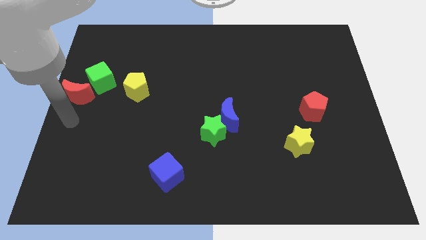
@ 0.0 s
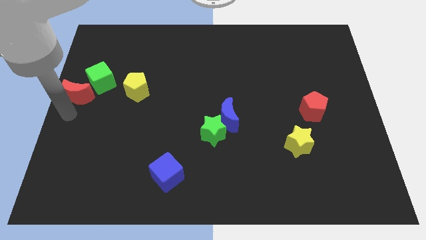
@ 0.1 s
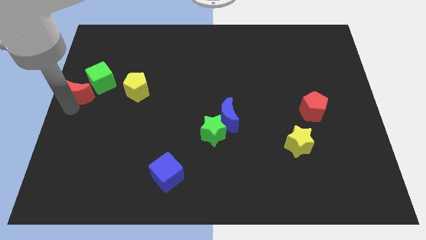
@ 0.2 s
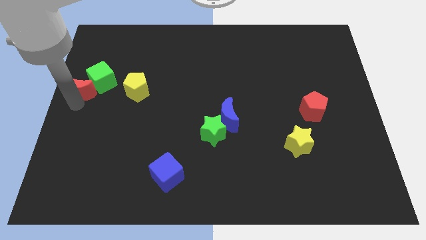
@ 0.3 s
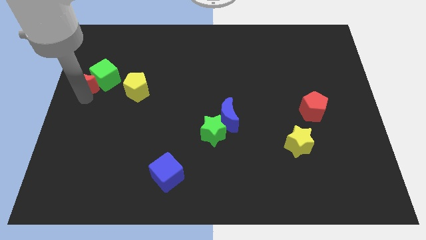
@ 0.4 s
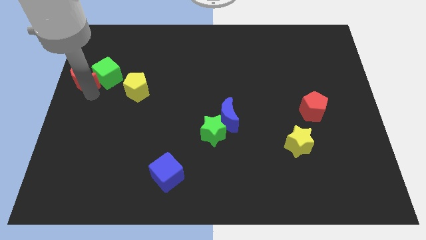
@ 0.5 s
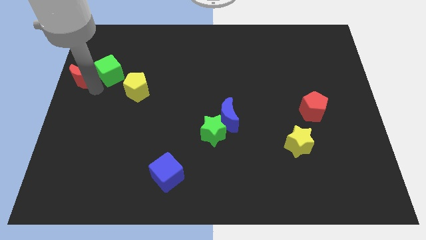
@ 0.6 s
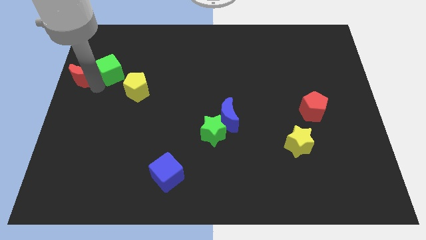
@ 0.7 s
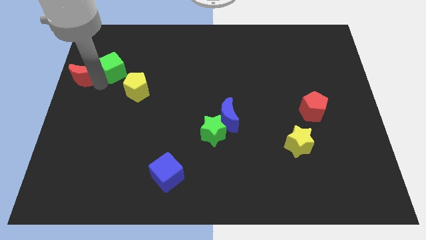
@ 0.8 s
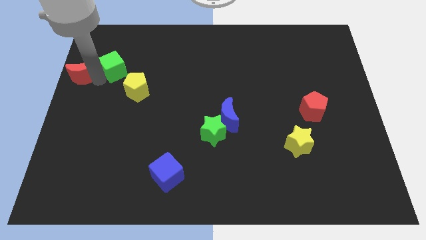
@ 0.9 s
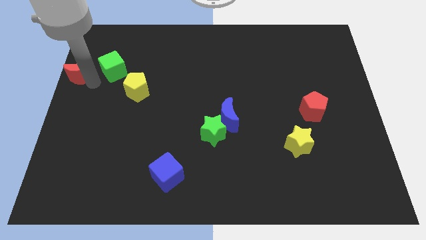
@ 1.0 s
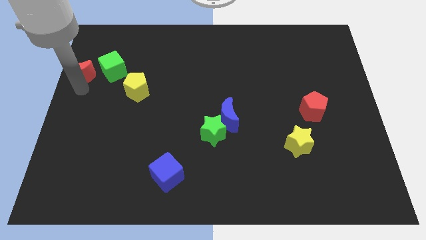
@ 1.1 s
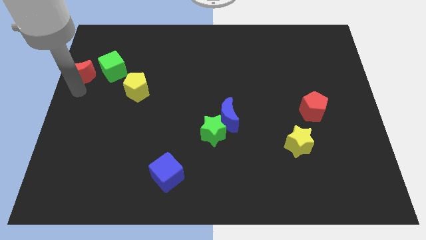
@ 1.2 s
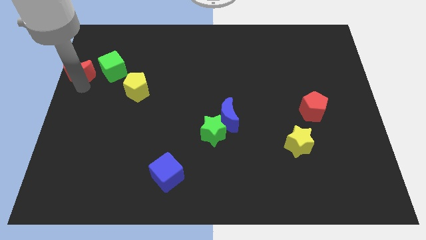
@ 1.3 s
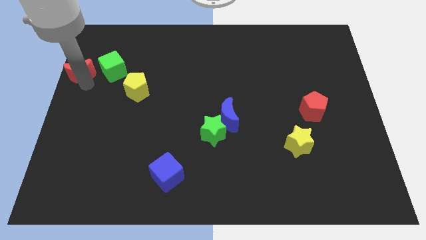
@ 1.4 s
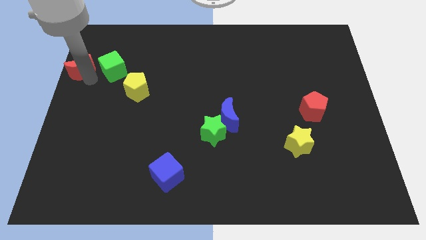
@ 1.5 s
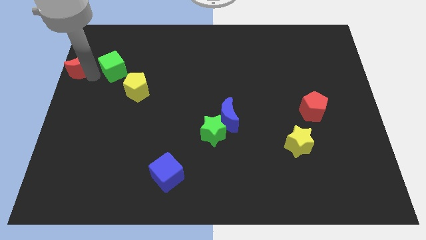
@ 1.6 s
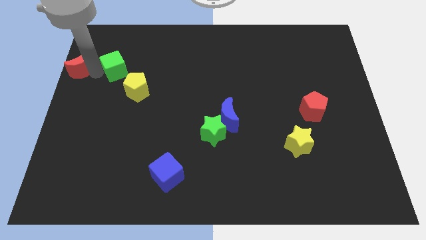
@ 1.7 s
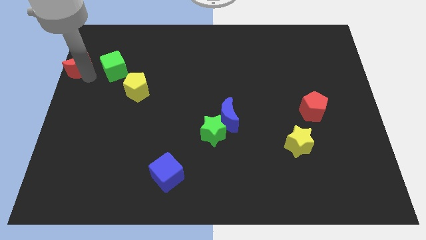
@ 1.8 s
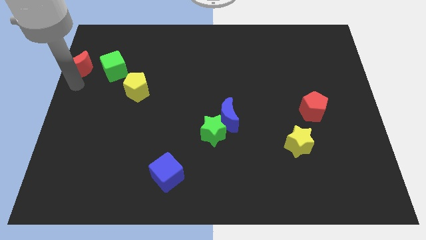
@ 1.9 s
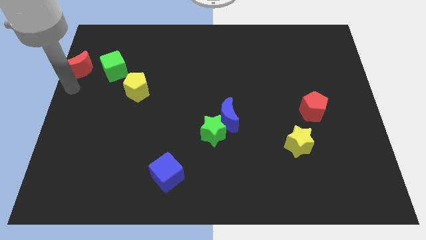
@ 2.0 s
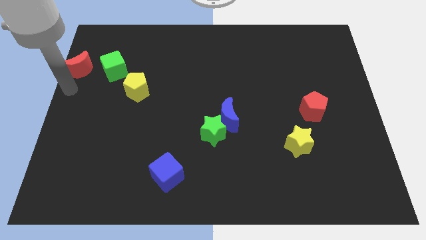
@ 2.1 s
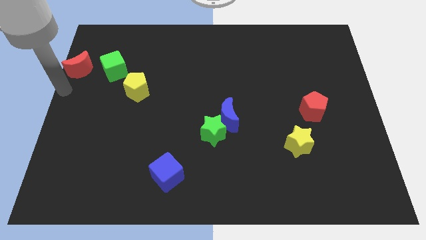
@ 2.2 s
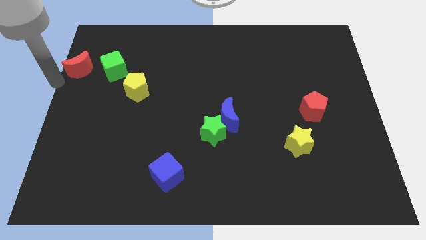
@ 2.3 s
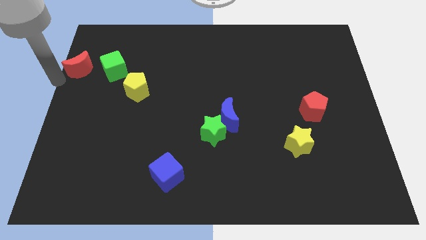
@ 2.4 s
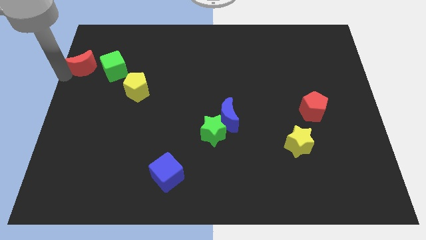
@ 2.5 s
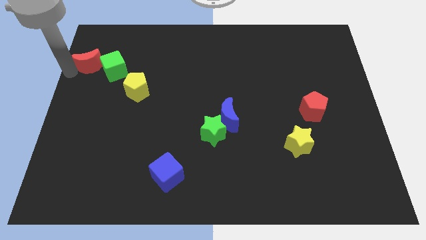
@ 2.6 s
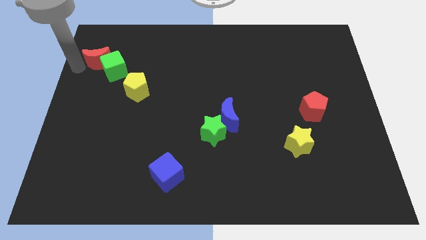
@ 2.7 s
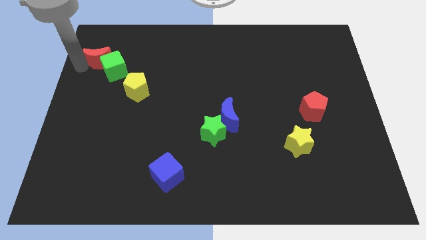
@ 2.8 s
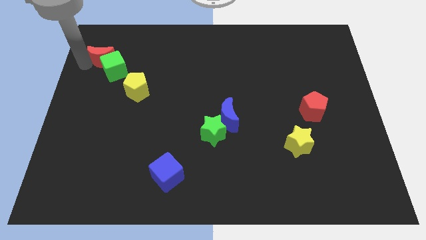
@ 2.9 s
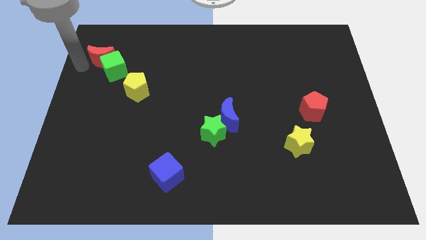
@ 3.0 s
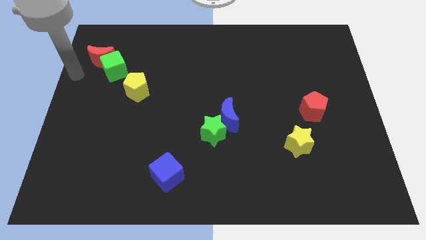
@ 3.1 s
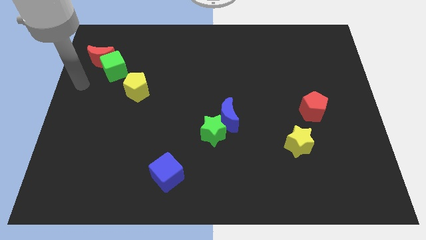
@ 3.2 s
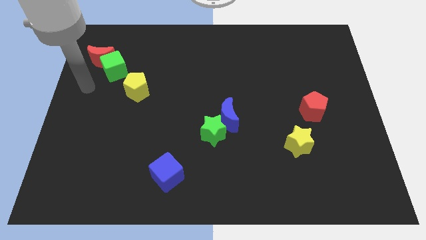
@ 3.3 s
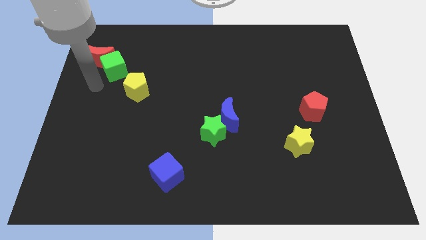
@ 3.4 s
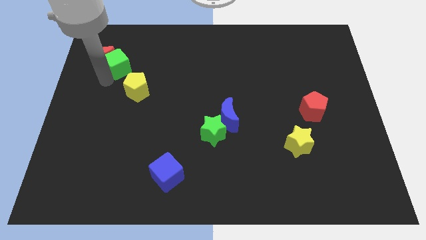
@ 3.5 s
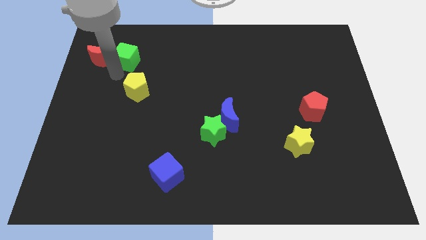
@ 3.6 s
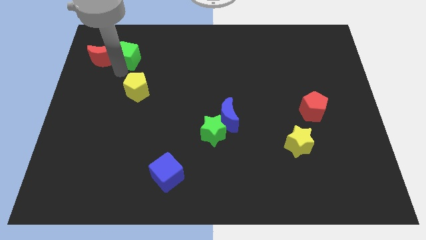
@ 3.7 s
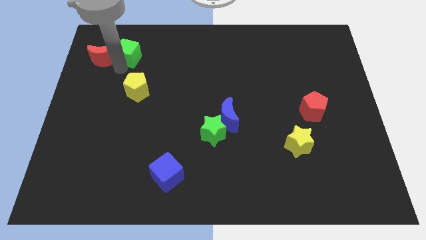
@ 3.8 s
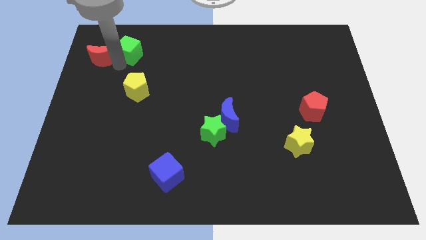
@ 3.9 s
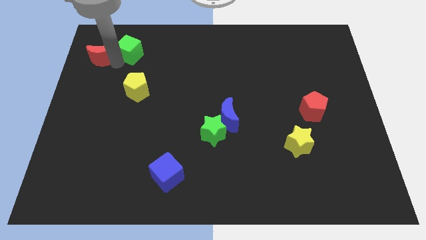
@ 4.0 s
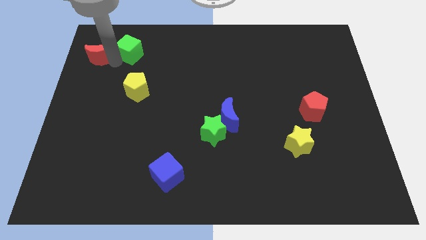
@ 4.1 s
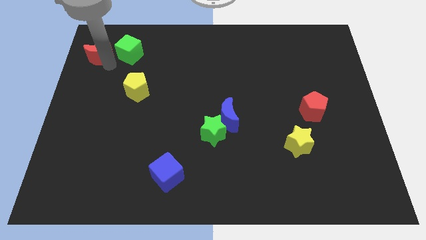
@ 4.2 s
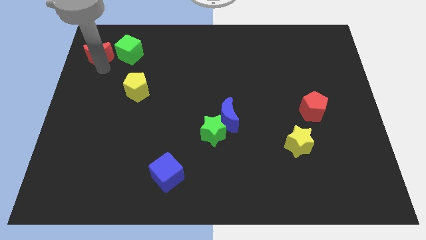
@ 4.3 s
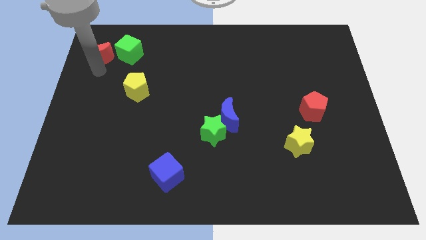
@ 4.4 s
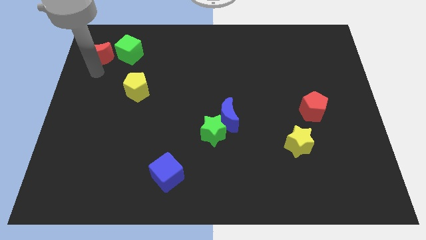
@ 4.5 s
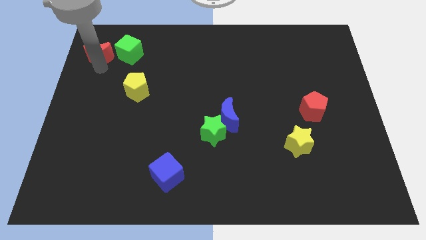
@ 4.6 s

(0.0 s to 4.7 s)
push the green cube and red moon together to the top side of the board

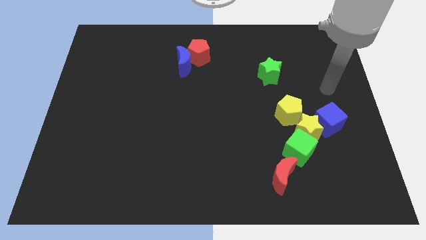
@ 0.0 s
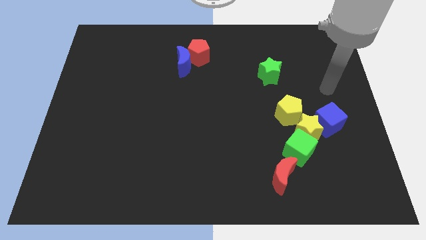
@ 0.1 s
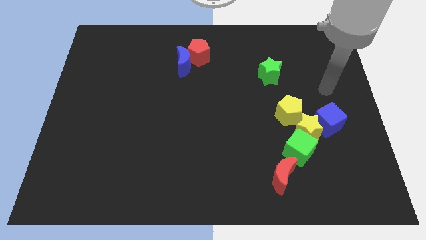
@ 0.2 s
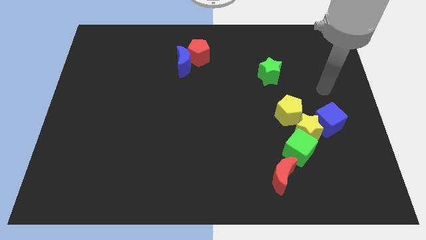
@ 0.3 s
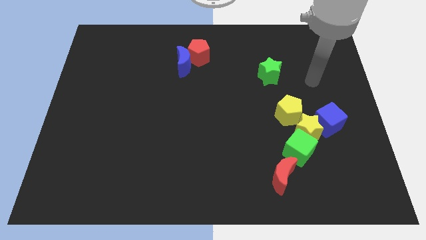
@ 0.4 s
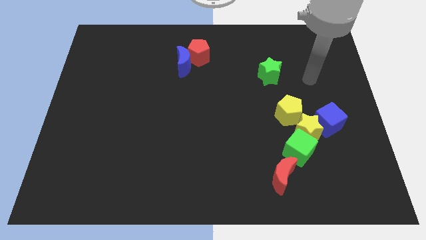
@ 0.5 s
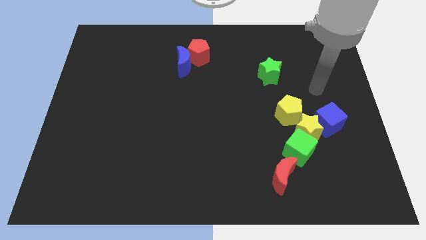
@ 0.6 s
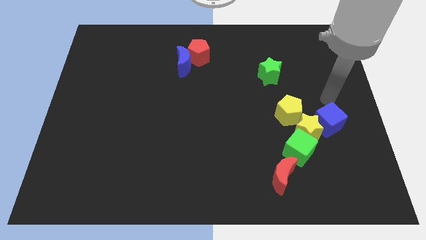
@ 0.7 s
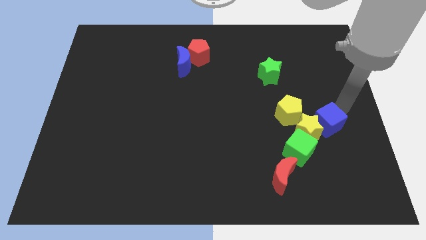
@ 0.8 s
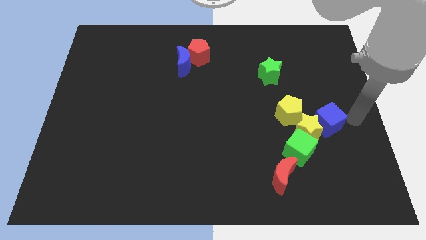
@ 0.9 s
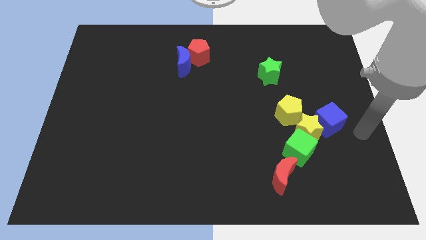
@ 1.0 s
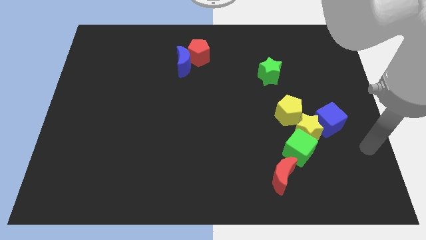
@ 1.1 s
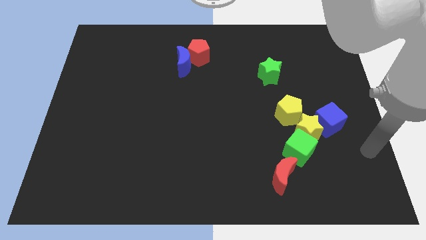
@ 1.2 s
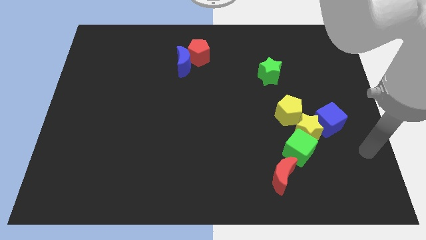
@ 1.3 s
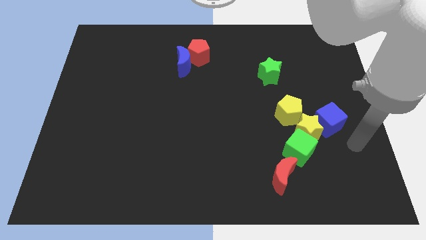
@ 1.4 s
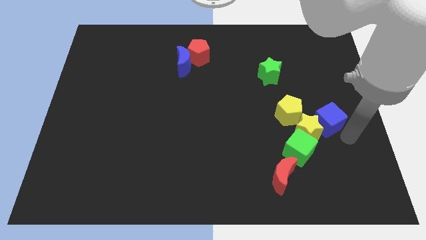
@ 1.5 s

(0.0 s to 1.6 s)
move the arm at the bottom of the blue cube

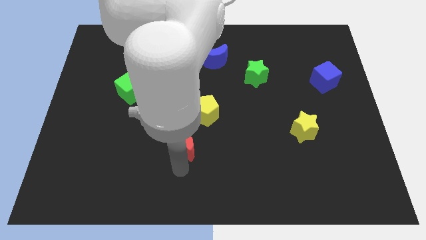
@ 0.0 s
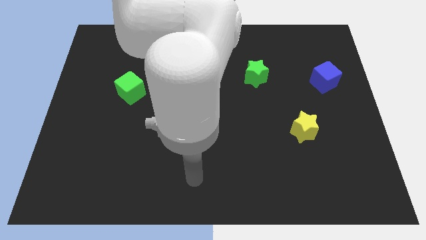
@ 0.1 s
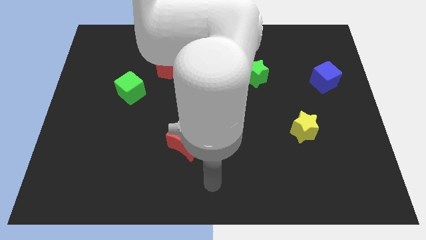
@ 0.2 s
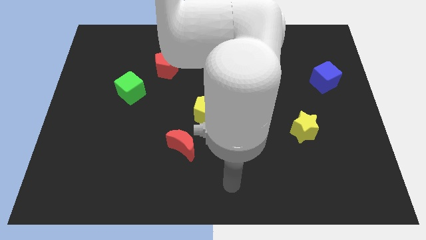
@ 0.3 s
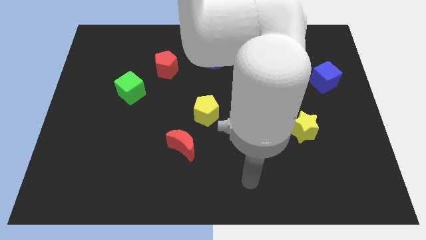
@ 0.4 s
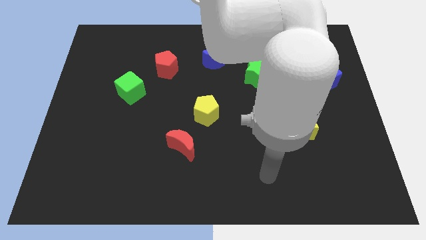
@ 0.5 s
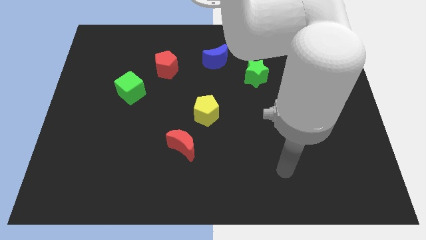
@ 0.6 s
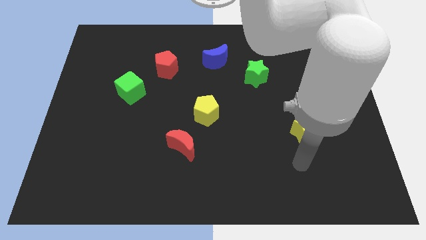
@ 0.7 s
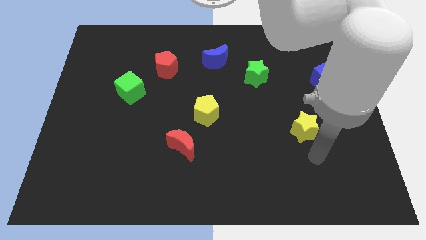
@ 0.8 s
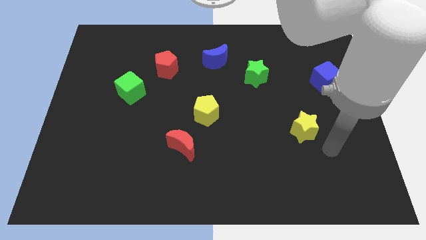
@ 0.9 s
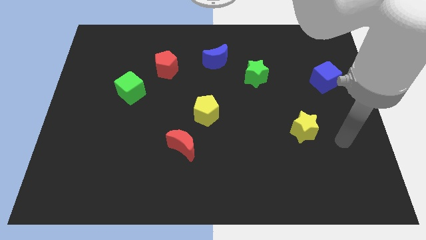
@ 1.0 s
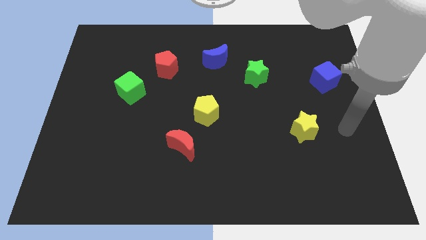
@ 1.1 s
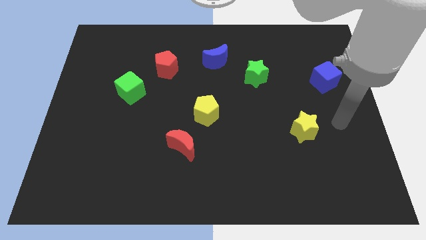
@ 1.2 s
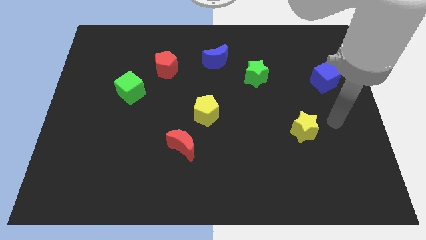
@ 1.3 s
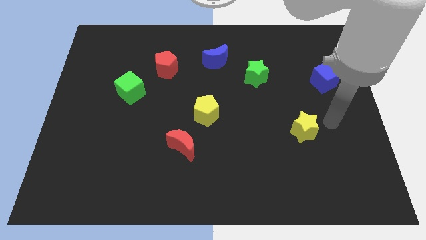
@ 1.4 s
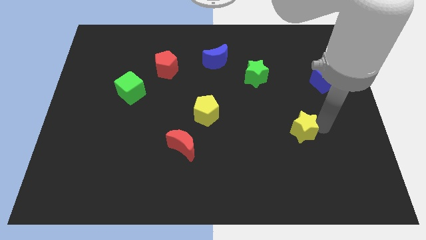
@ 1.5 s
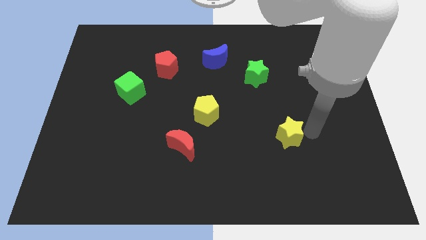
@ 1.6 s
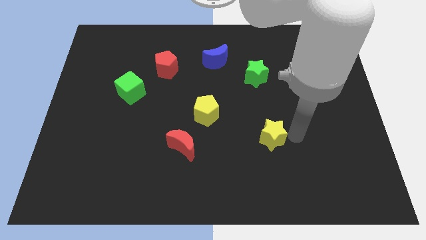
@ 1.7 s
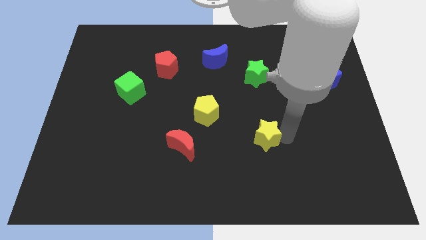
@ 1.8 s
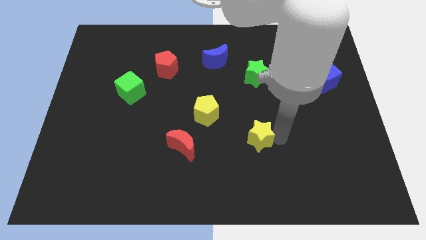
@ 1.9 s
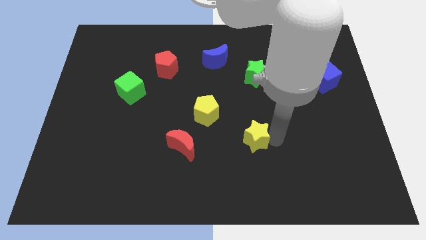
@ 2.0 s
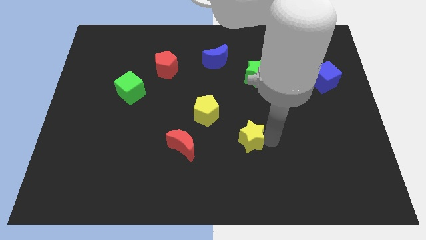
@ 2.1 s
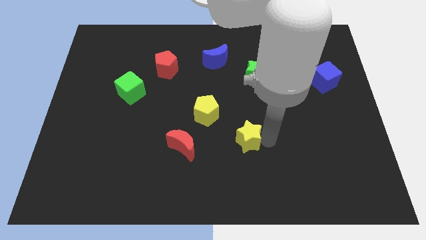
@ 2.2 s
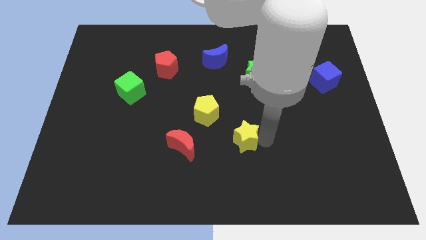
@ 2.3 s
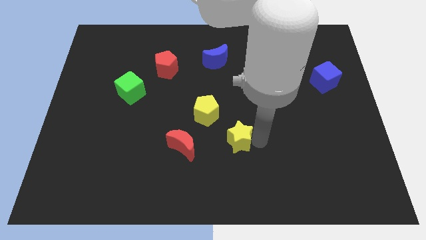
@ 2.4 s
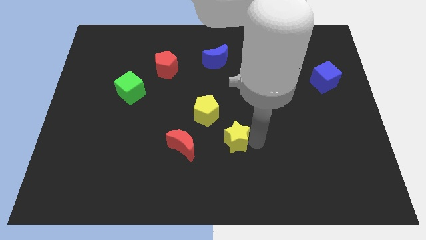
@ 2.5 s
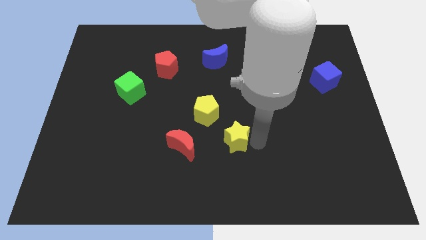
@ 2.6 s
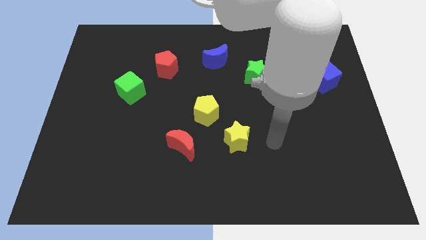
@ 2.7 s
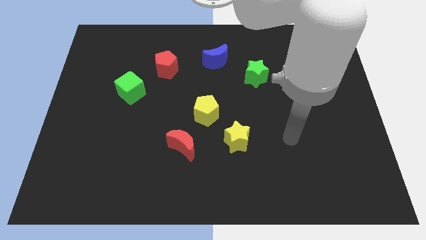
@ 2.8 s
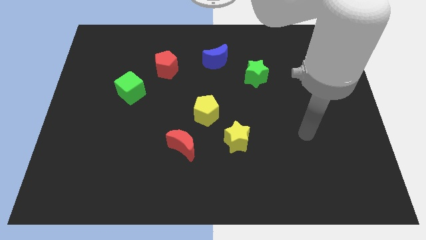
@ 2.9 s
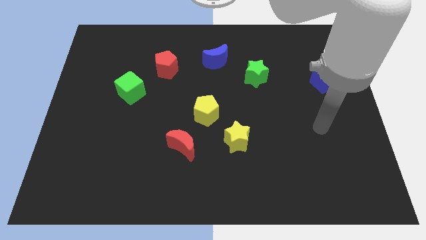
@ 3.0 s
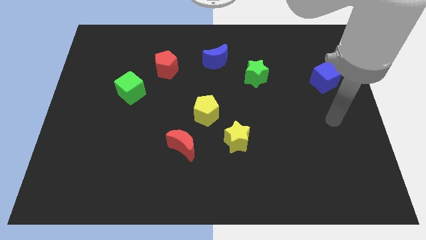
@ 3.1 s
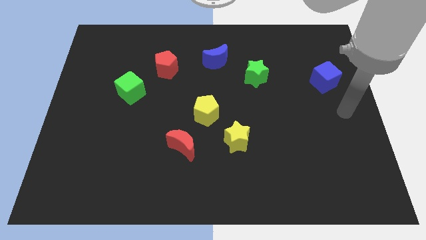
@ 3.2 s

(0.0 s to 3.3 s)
move the yellow star to the right of the red crescent
